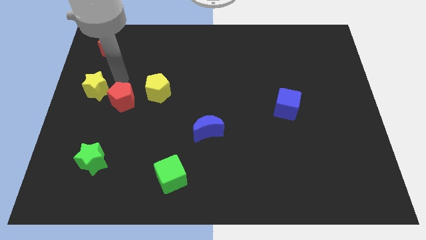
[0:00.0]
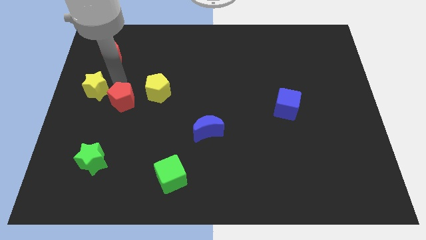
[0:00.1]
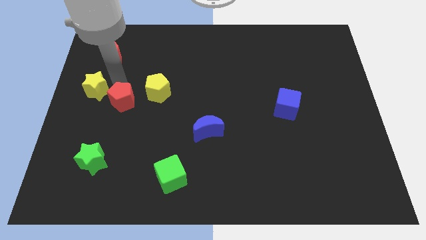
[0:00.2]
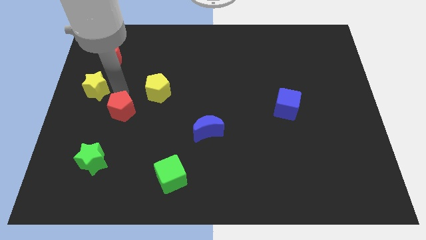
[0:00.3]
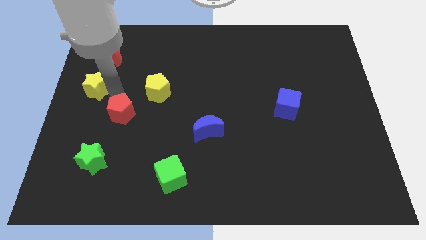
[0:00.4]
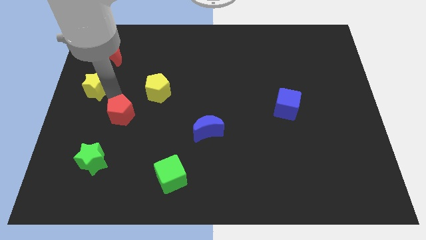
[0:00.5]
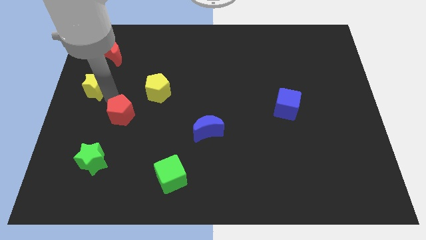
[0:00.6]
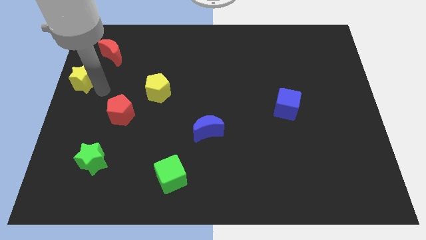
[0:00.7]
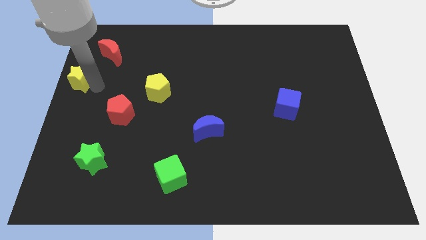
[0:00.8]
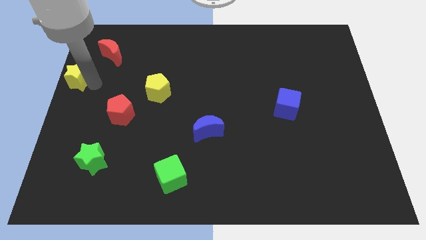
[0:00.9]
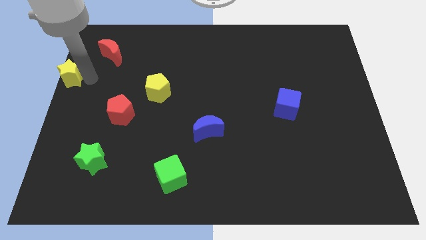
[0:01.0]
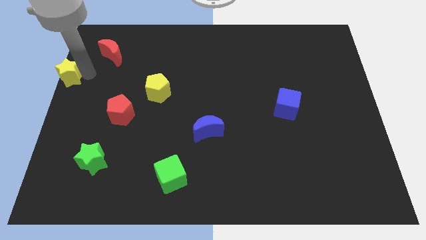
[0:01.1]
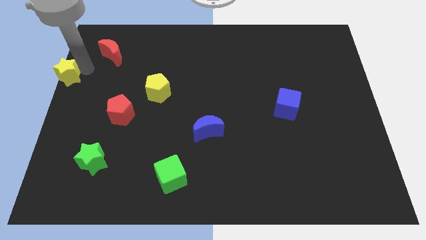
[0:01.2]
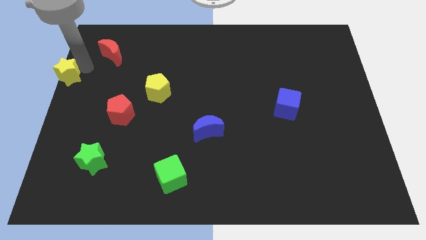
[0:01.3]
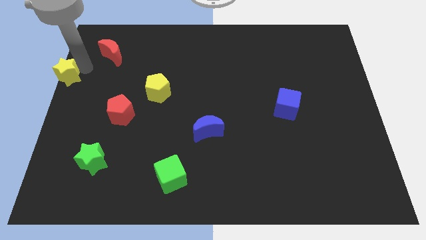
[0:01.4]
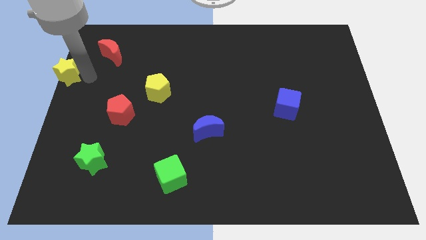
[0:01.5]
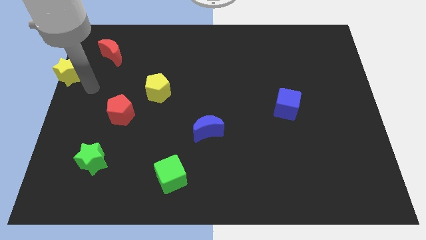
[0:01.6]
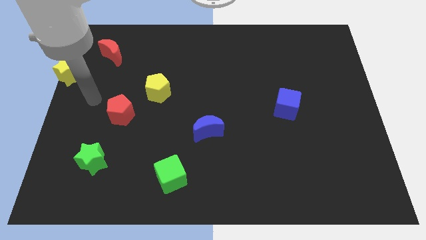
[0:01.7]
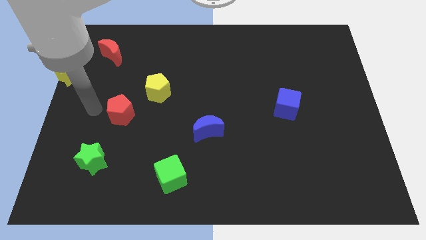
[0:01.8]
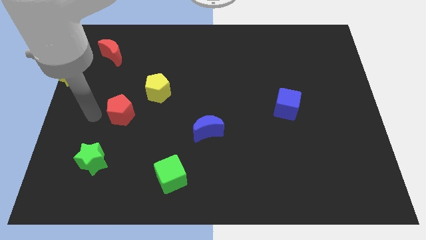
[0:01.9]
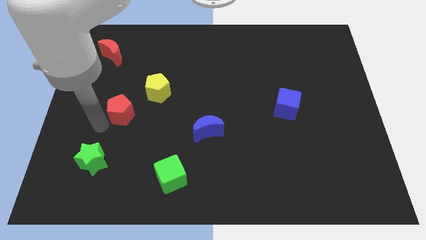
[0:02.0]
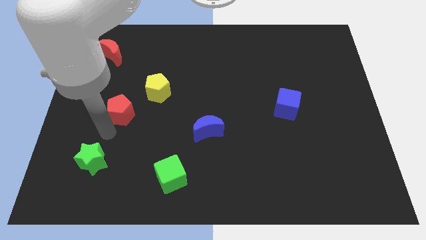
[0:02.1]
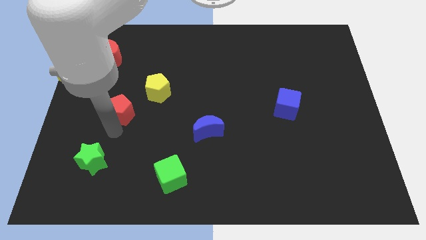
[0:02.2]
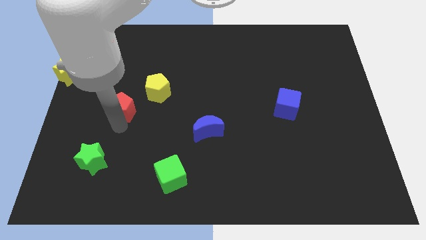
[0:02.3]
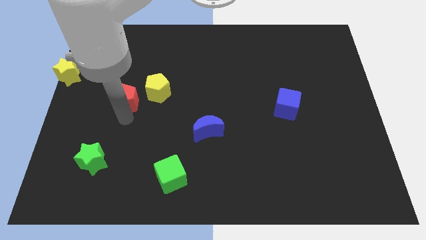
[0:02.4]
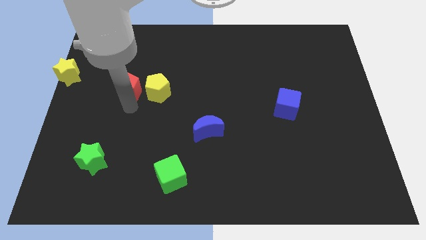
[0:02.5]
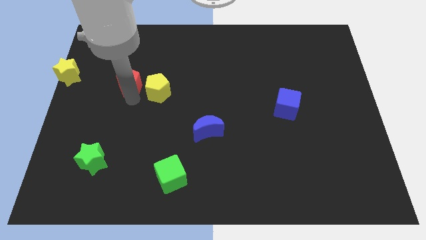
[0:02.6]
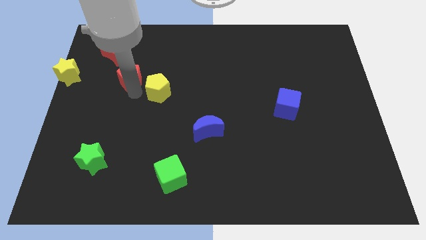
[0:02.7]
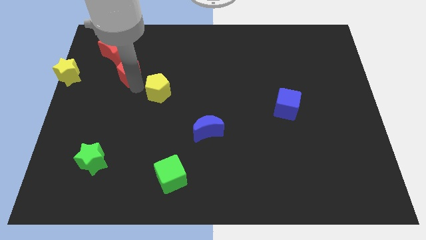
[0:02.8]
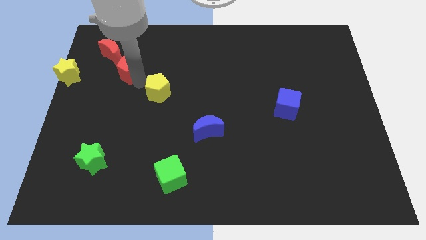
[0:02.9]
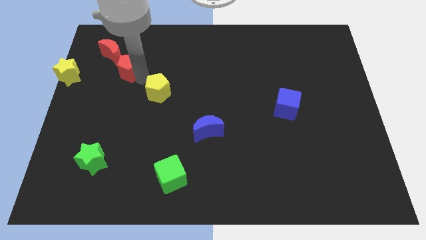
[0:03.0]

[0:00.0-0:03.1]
push the red pentagon to the bottom right of the red moon

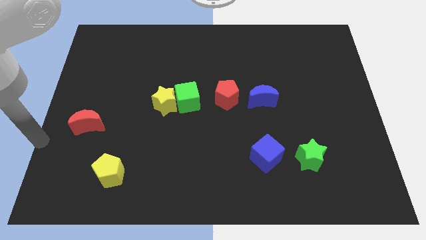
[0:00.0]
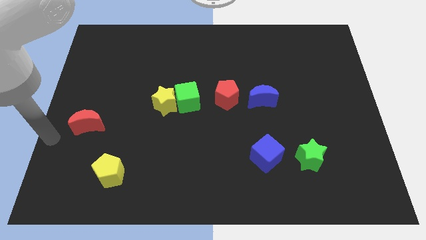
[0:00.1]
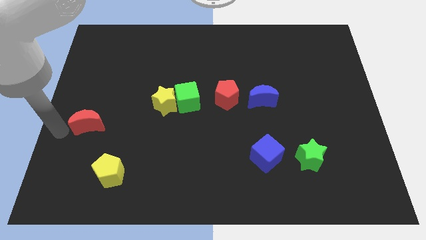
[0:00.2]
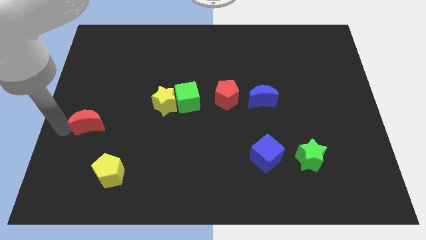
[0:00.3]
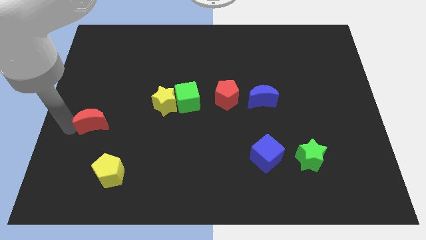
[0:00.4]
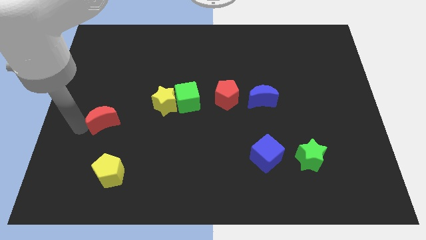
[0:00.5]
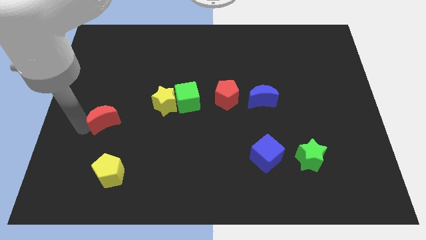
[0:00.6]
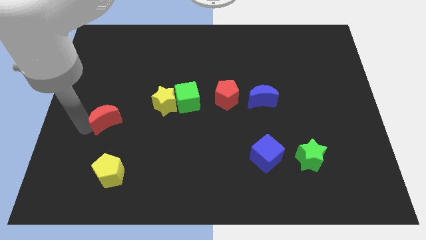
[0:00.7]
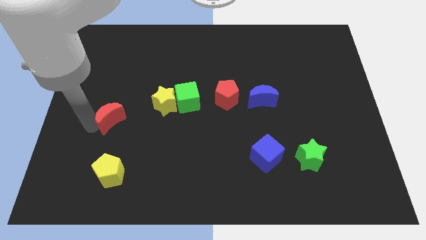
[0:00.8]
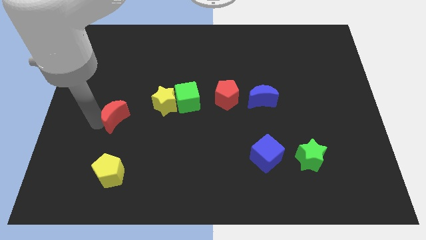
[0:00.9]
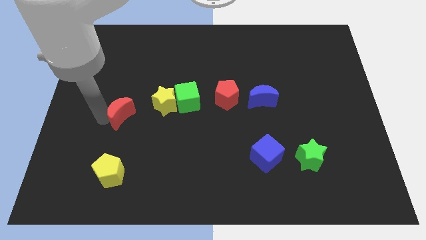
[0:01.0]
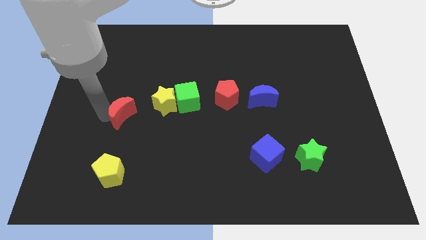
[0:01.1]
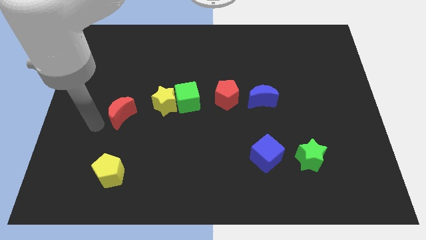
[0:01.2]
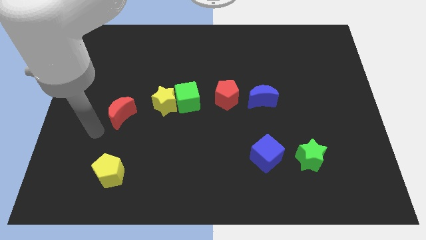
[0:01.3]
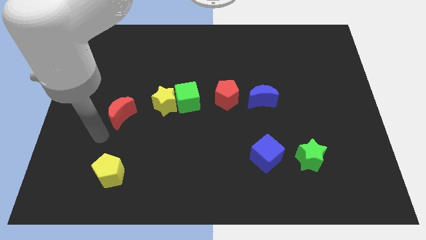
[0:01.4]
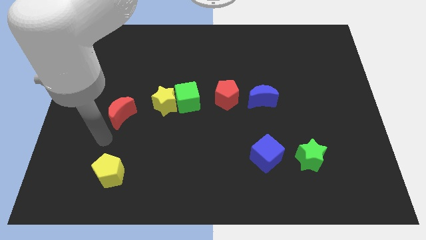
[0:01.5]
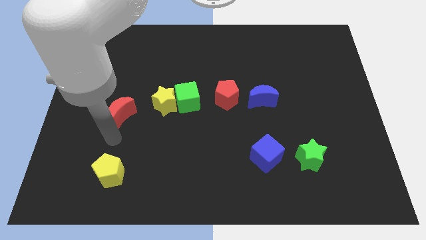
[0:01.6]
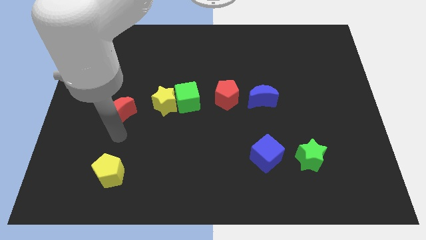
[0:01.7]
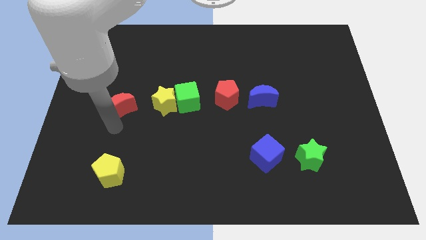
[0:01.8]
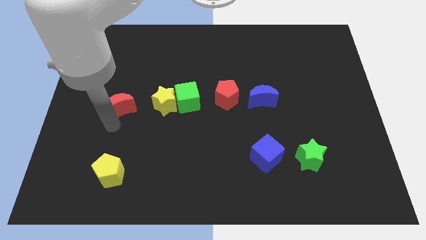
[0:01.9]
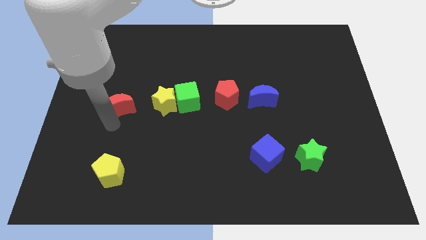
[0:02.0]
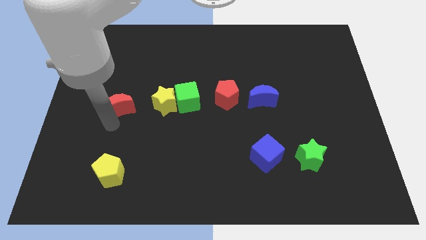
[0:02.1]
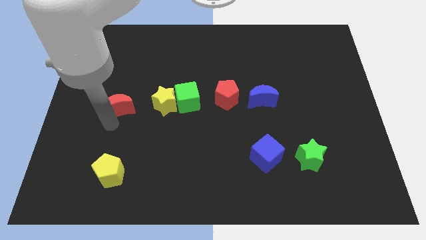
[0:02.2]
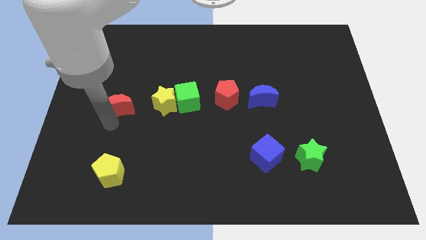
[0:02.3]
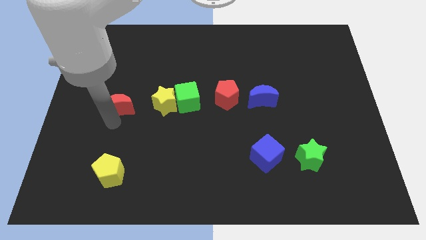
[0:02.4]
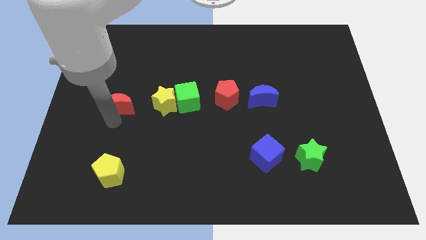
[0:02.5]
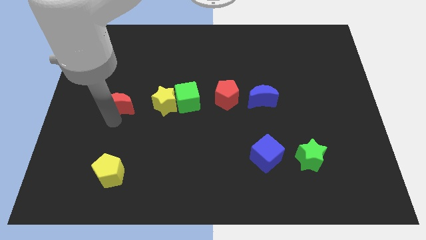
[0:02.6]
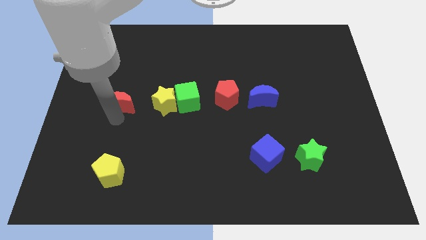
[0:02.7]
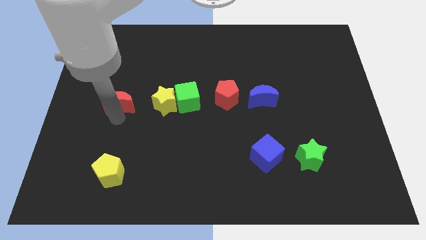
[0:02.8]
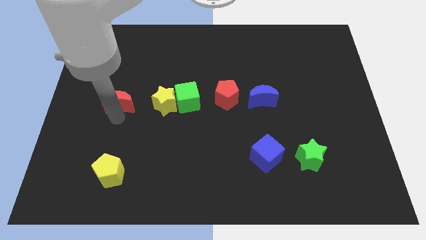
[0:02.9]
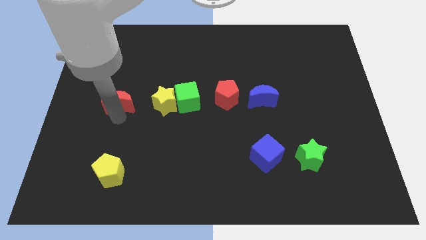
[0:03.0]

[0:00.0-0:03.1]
place red moon to the left of yellow star

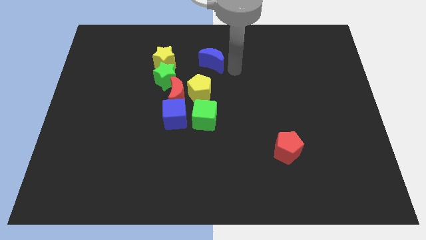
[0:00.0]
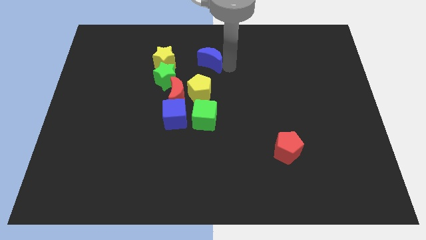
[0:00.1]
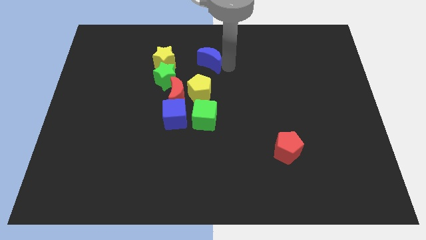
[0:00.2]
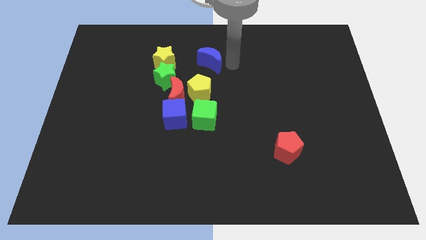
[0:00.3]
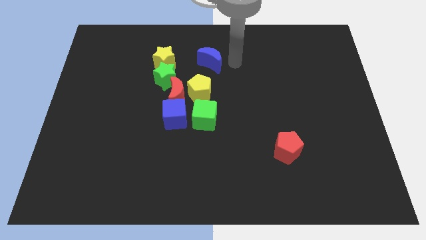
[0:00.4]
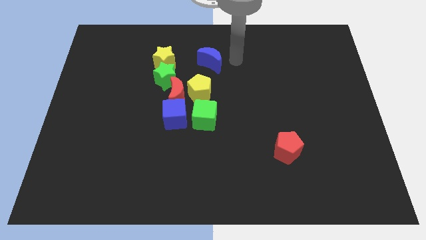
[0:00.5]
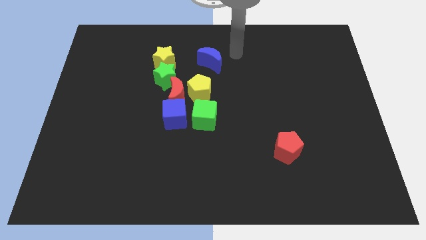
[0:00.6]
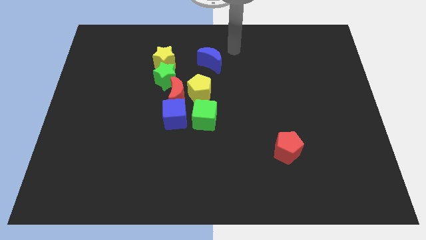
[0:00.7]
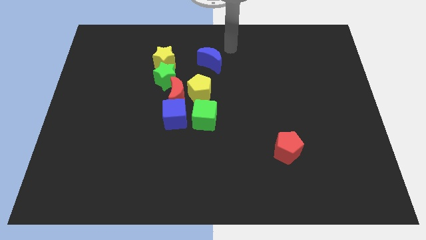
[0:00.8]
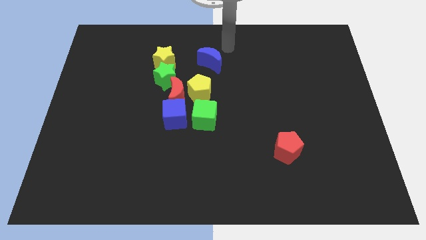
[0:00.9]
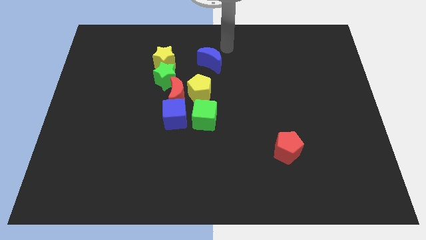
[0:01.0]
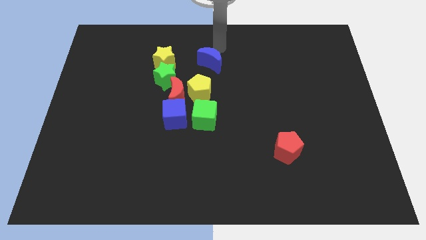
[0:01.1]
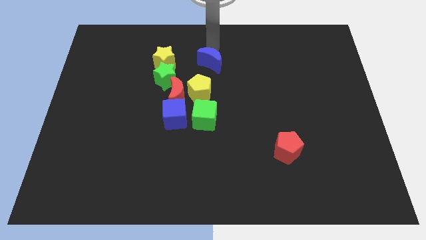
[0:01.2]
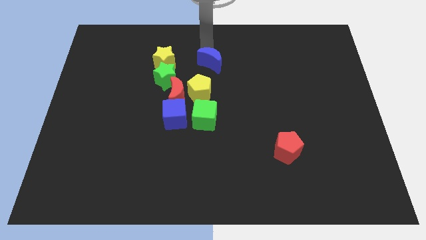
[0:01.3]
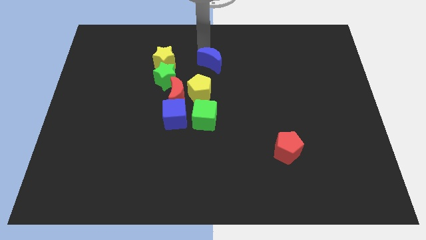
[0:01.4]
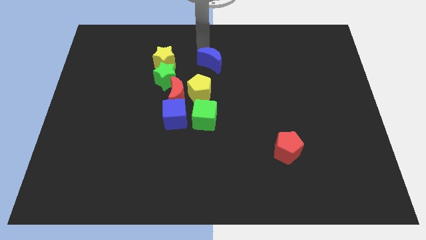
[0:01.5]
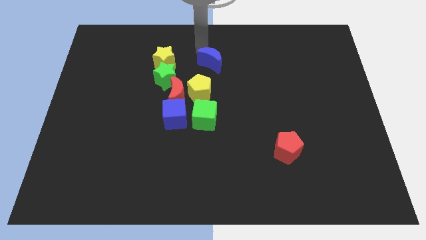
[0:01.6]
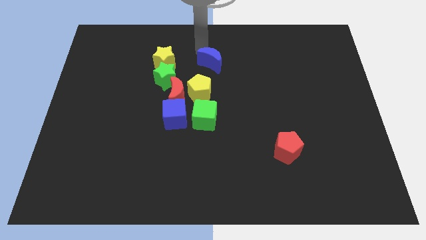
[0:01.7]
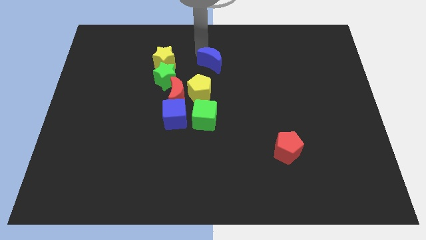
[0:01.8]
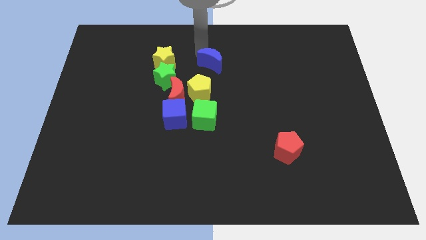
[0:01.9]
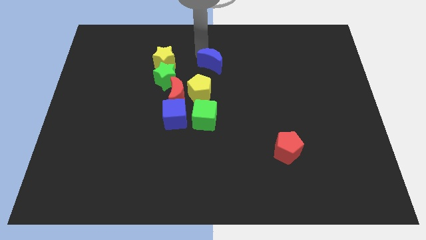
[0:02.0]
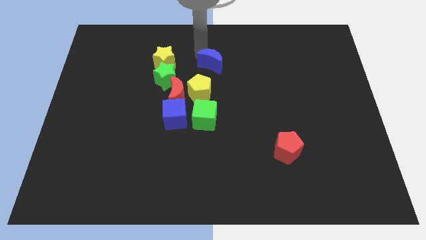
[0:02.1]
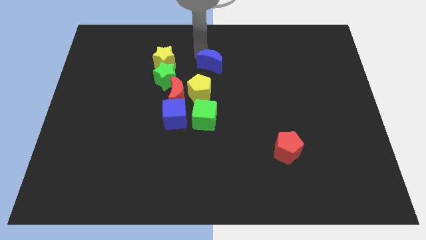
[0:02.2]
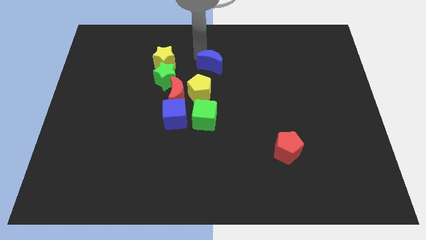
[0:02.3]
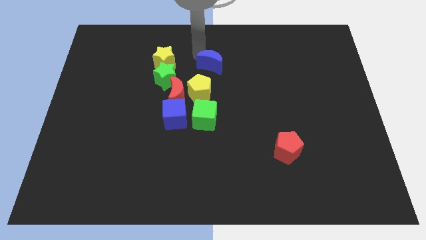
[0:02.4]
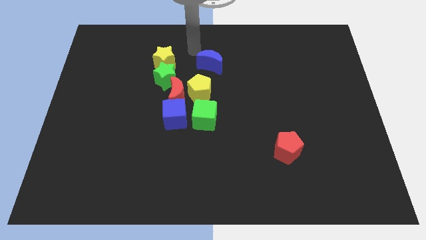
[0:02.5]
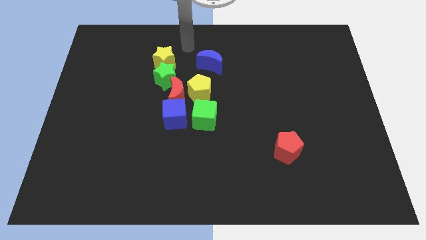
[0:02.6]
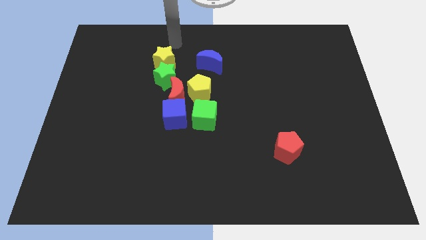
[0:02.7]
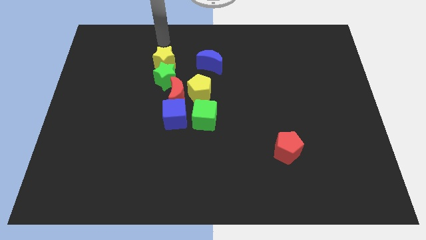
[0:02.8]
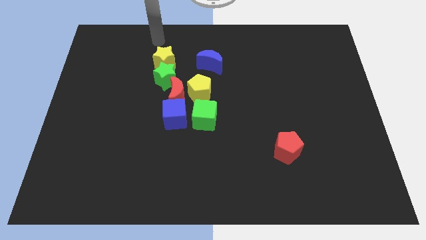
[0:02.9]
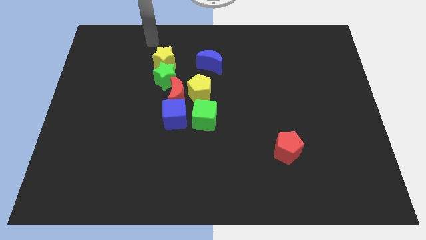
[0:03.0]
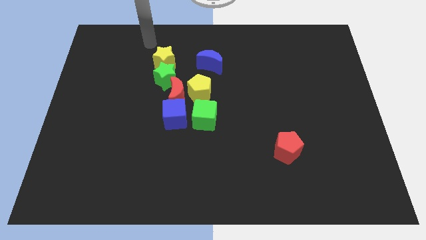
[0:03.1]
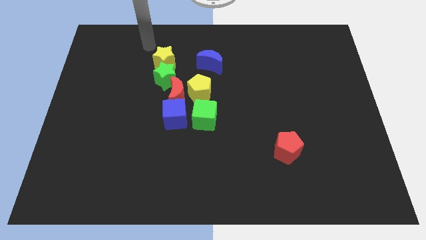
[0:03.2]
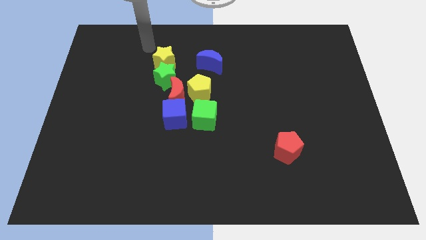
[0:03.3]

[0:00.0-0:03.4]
tap at the left and right side of the blue crescent
